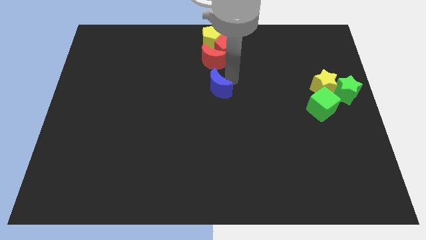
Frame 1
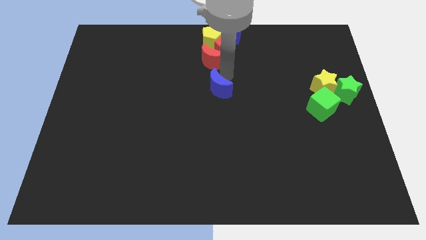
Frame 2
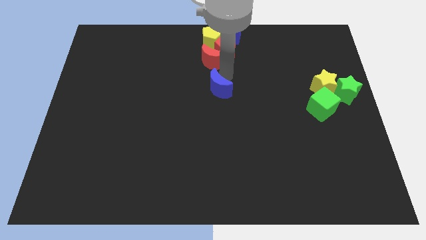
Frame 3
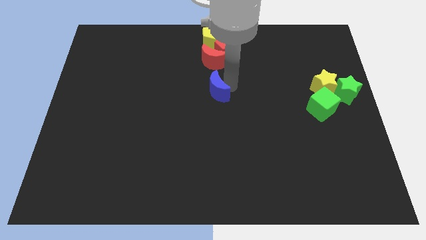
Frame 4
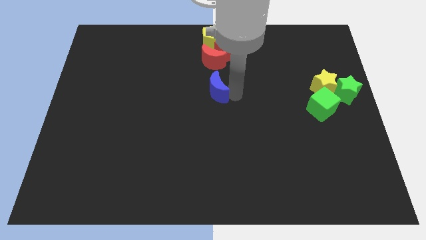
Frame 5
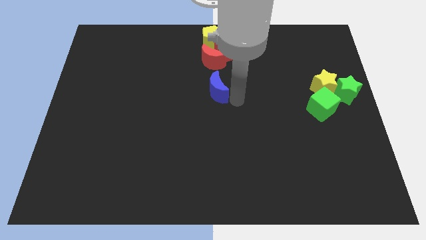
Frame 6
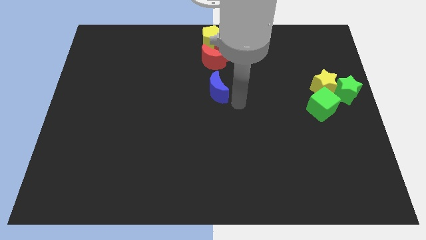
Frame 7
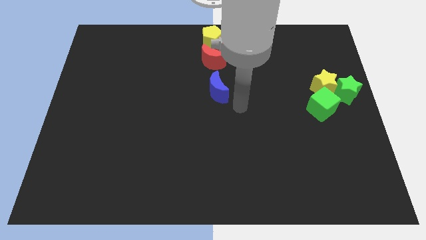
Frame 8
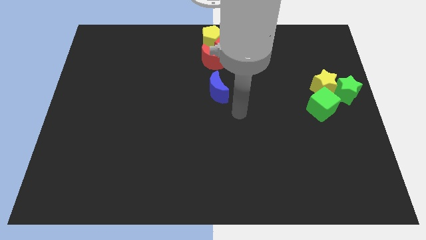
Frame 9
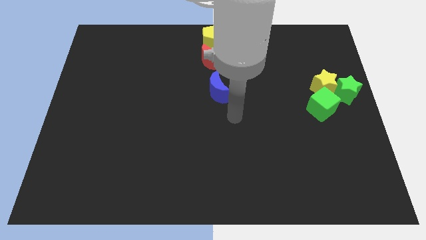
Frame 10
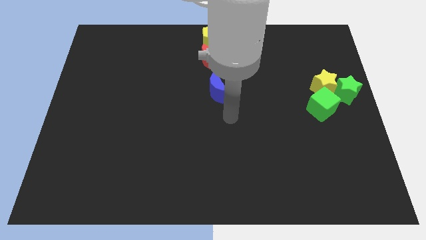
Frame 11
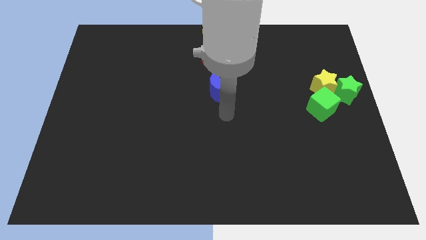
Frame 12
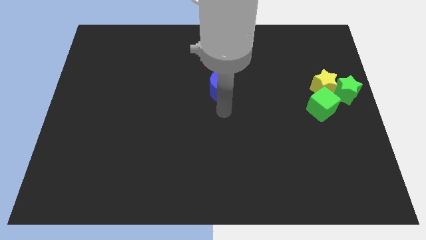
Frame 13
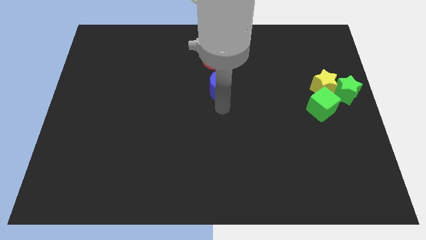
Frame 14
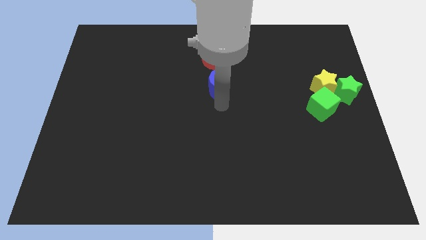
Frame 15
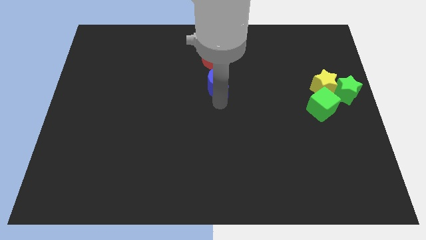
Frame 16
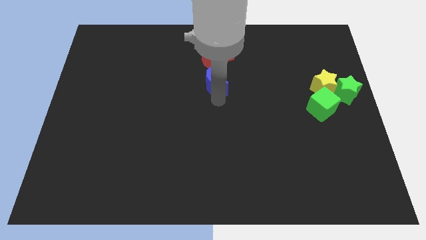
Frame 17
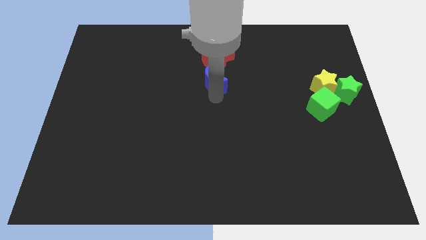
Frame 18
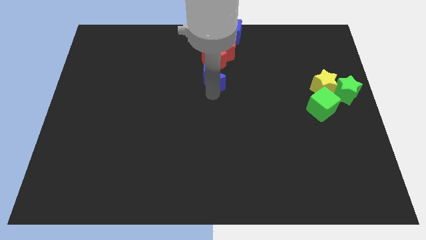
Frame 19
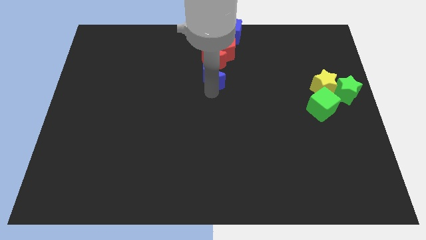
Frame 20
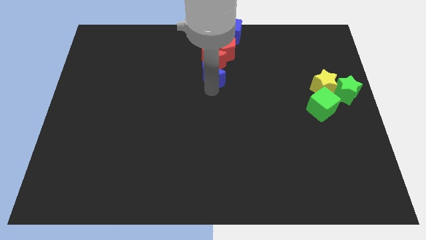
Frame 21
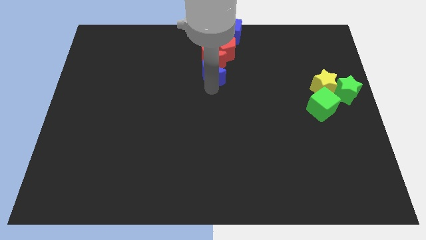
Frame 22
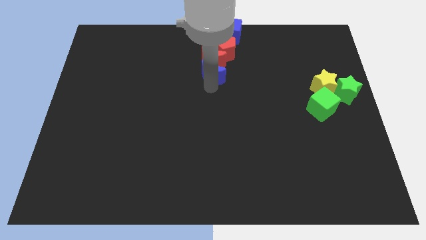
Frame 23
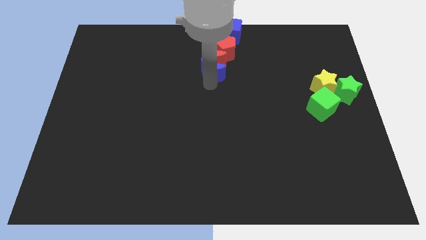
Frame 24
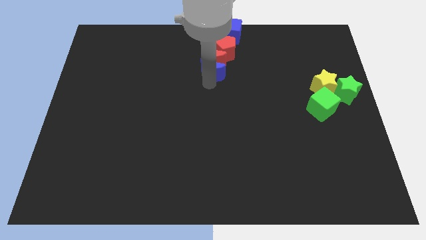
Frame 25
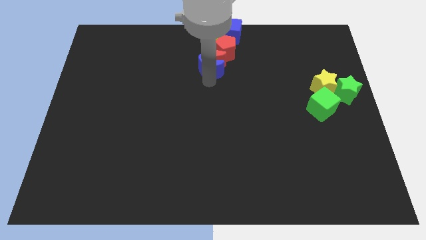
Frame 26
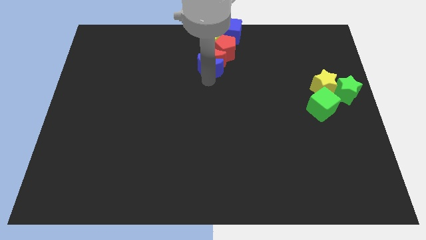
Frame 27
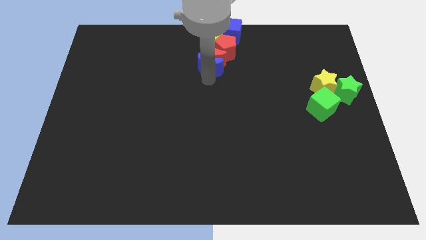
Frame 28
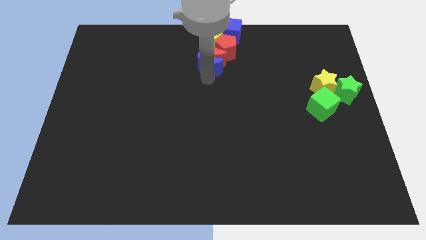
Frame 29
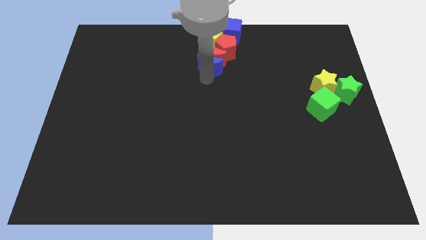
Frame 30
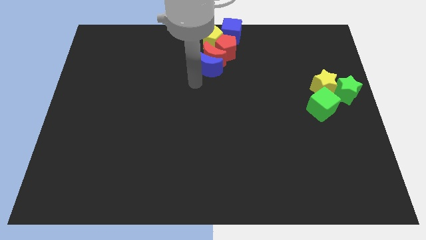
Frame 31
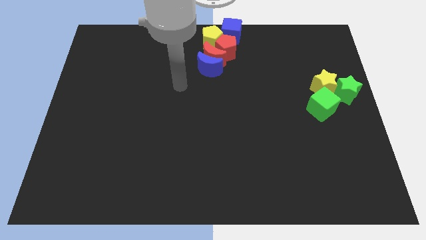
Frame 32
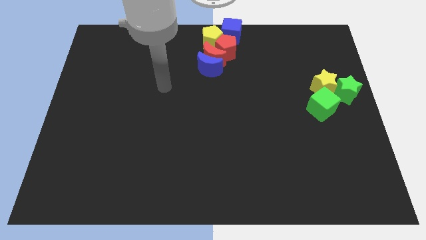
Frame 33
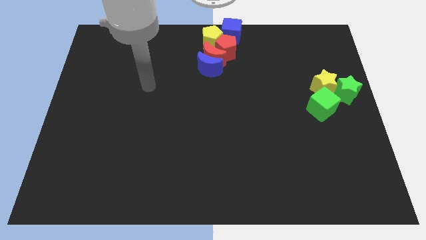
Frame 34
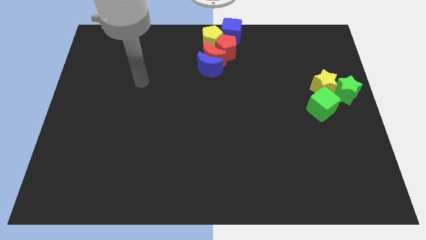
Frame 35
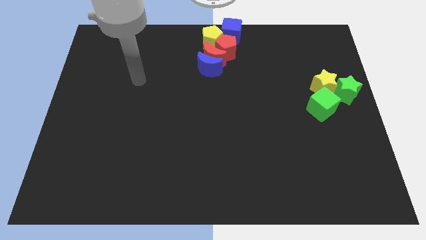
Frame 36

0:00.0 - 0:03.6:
push the blue crescent into the red crescent

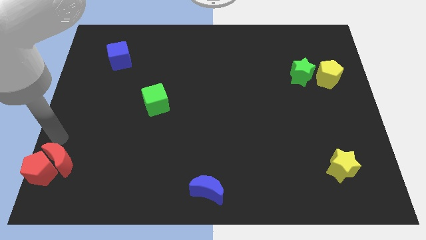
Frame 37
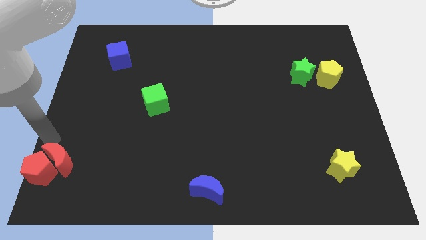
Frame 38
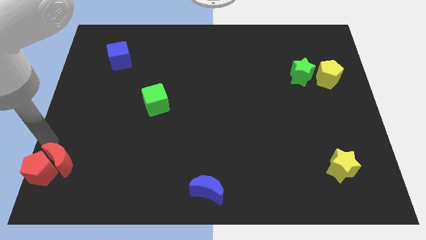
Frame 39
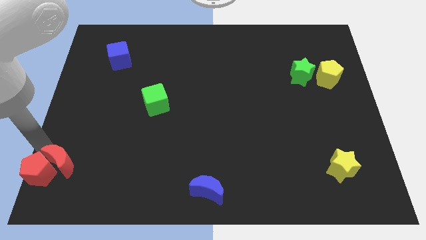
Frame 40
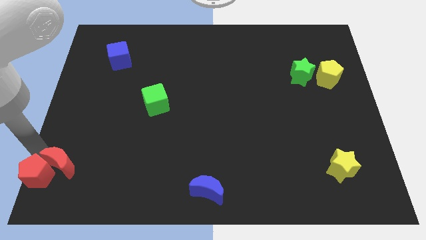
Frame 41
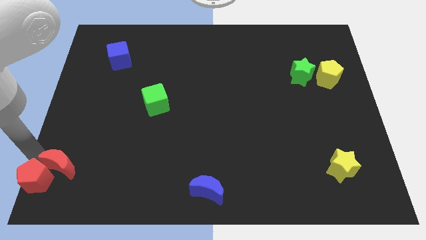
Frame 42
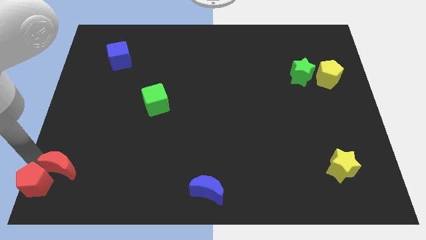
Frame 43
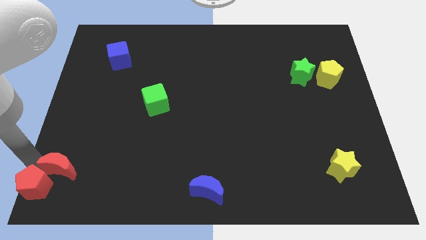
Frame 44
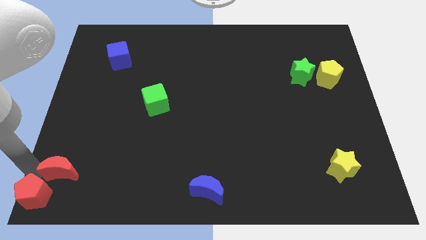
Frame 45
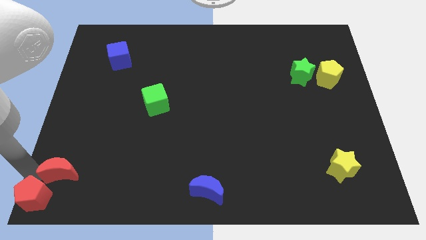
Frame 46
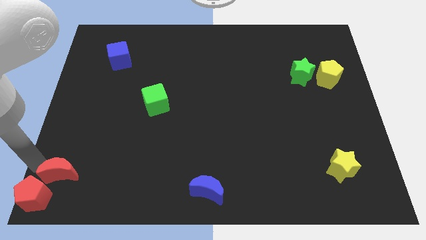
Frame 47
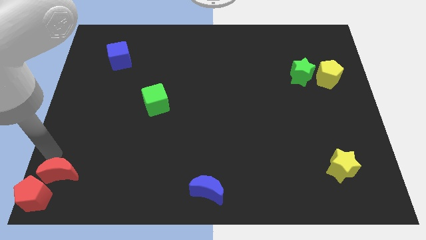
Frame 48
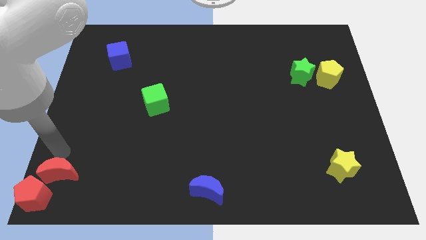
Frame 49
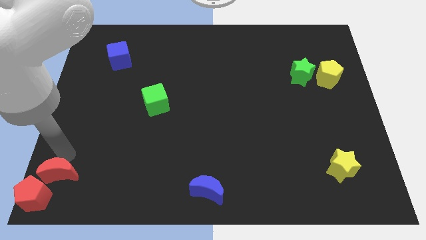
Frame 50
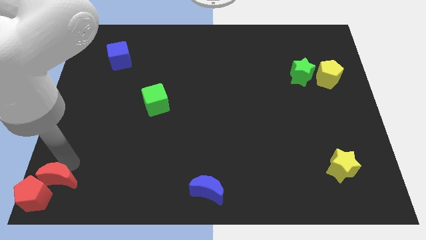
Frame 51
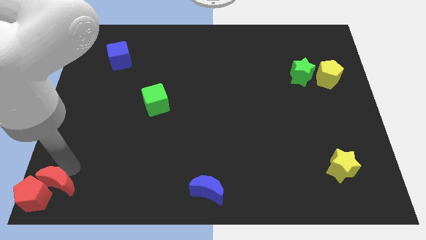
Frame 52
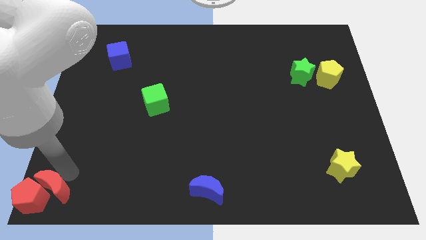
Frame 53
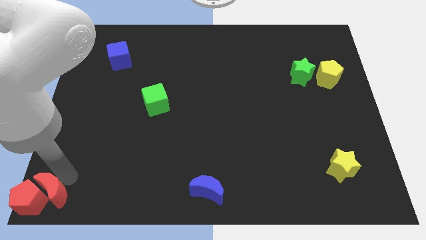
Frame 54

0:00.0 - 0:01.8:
push the red blocks to the bottom left corner of the table

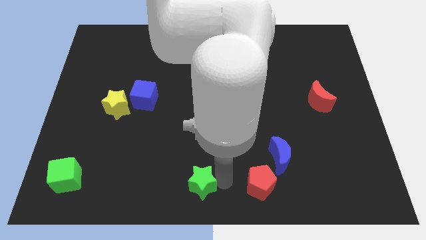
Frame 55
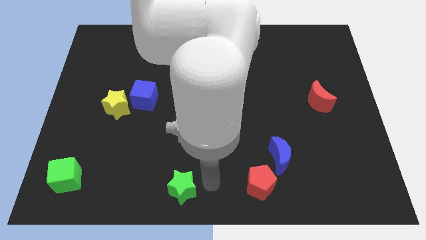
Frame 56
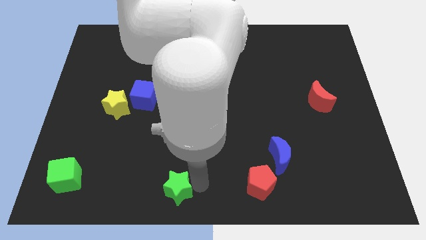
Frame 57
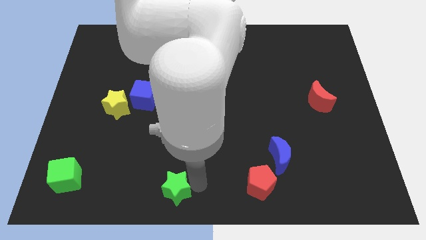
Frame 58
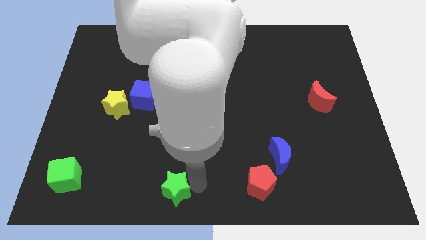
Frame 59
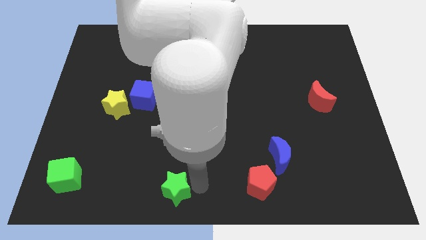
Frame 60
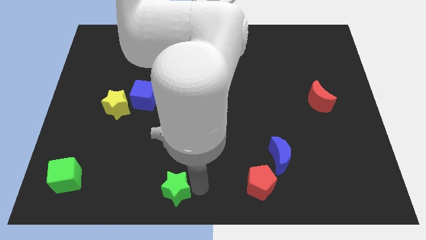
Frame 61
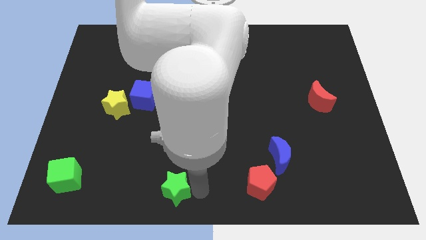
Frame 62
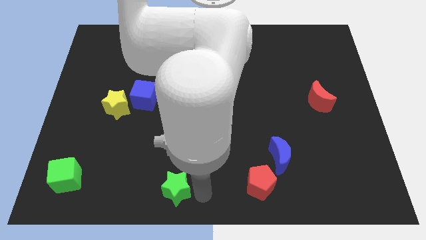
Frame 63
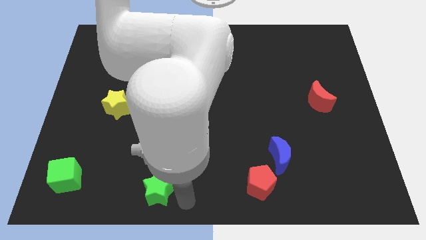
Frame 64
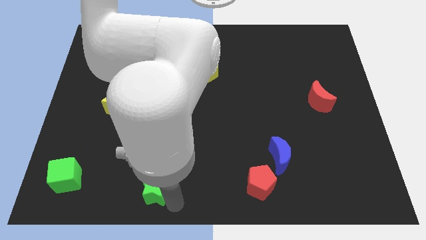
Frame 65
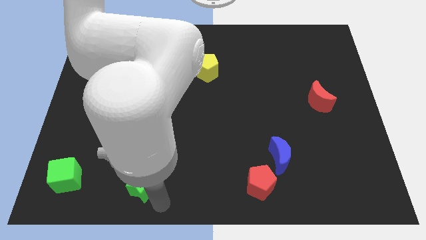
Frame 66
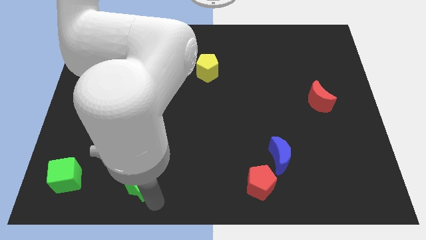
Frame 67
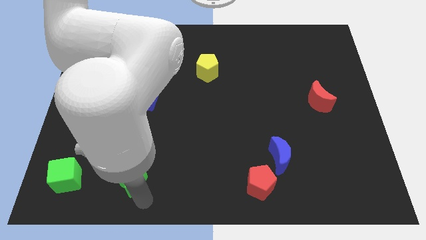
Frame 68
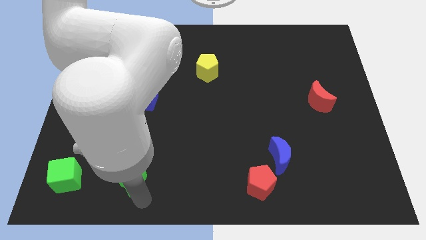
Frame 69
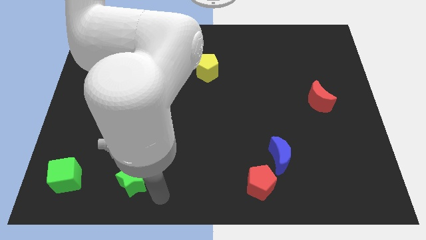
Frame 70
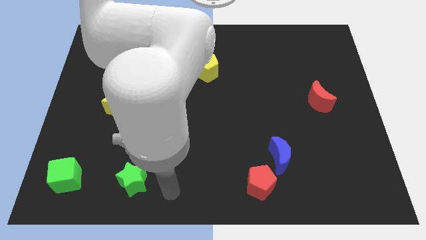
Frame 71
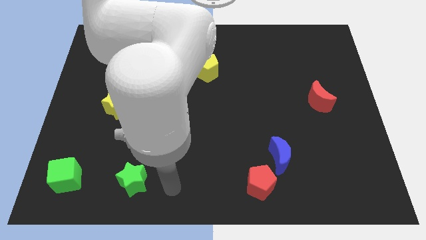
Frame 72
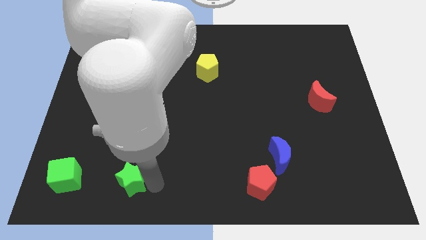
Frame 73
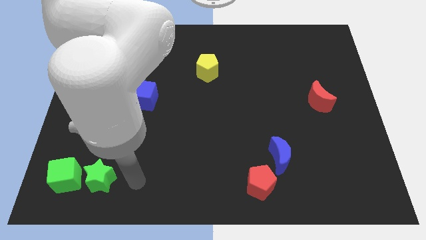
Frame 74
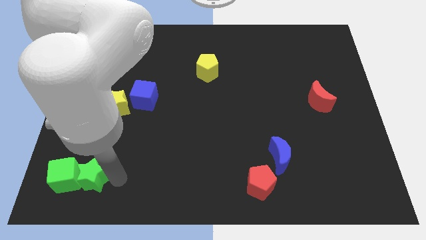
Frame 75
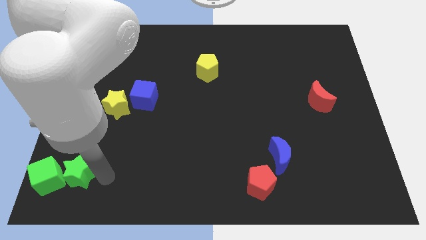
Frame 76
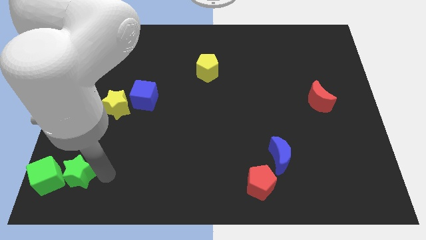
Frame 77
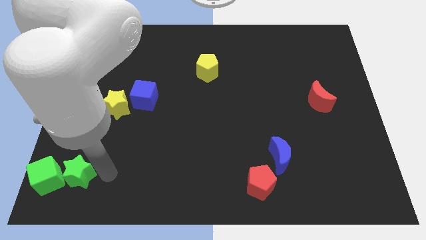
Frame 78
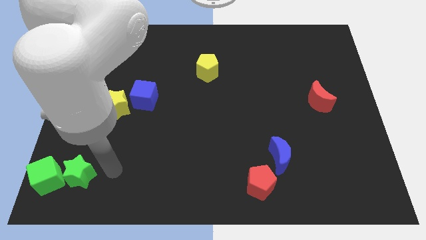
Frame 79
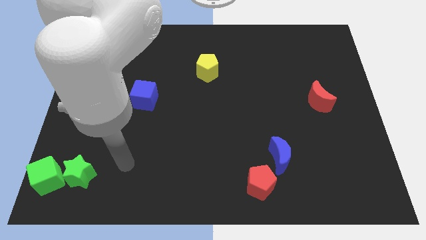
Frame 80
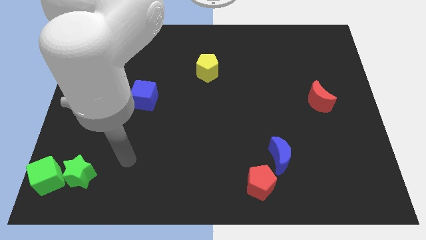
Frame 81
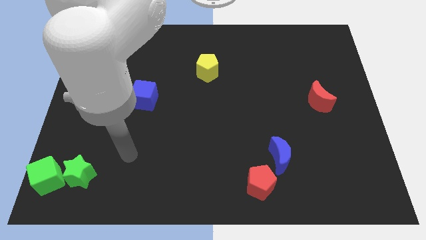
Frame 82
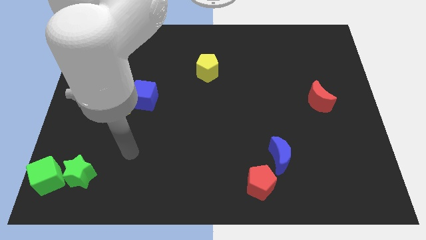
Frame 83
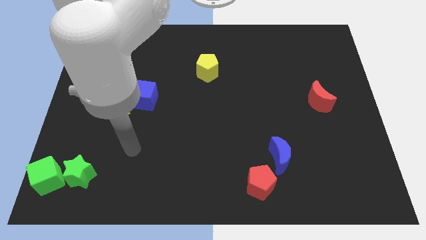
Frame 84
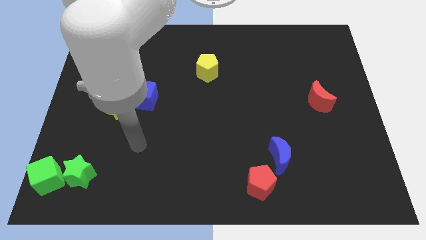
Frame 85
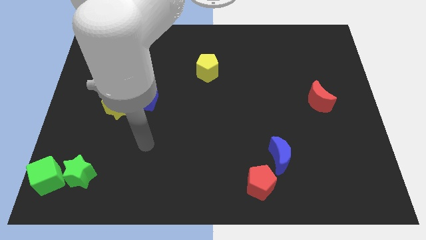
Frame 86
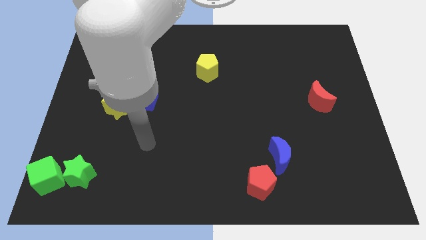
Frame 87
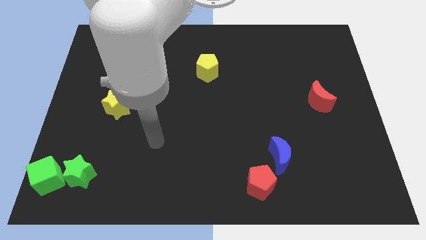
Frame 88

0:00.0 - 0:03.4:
move the green star towards the right side of the green cube
